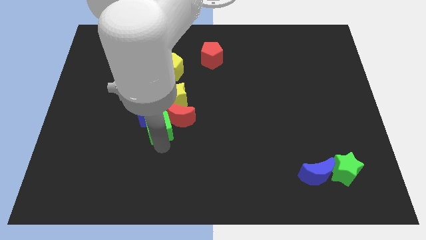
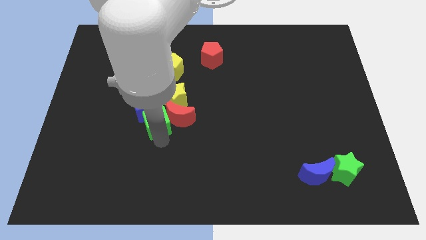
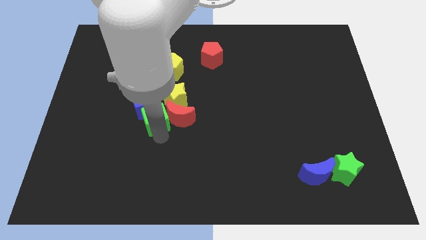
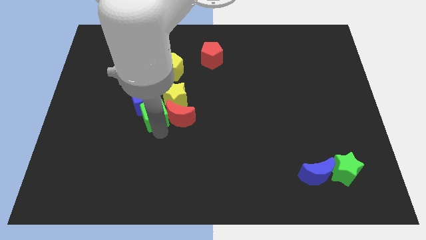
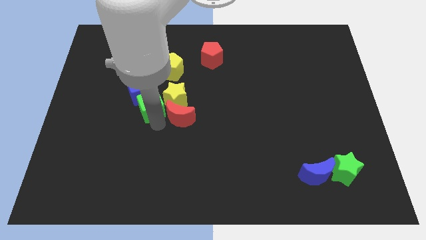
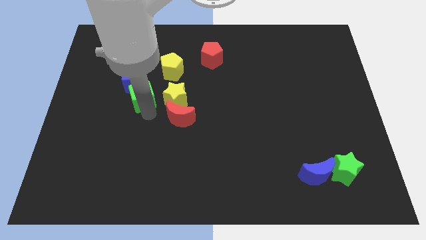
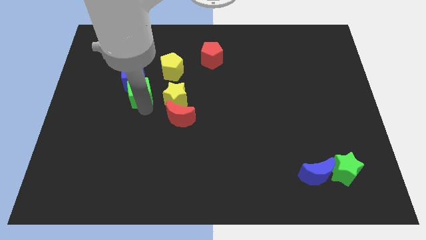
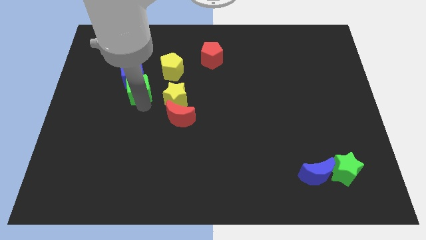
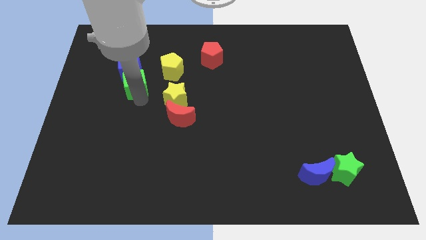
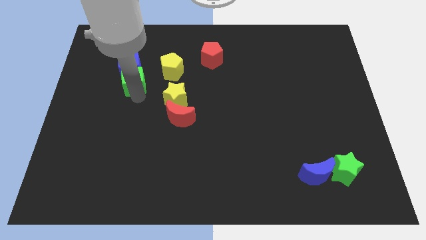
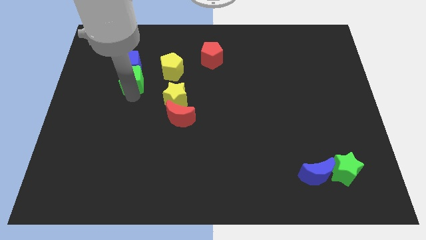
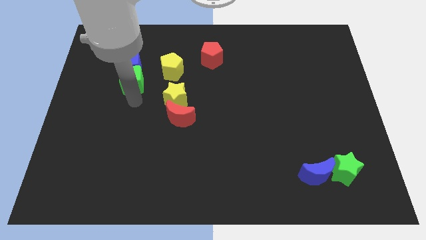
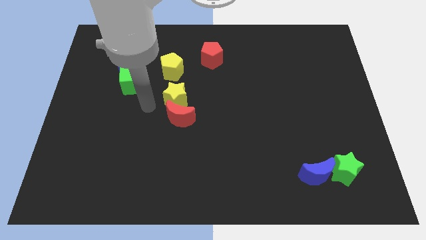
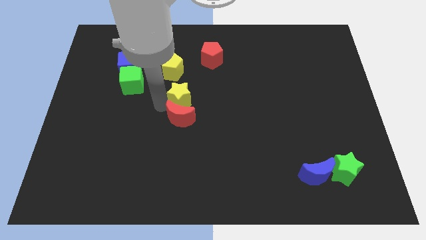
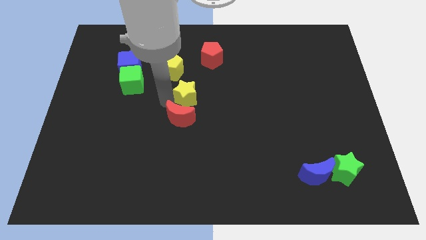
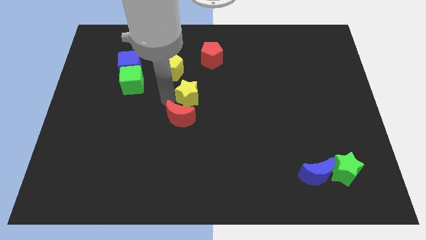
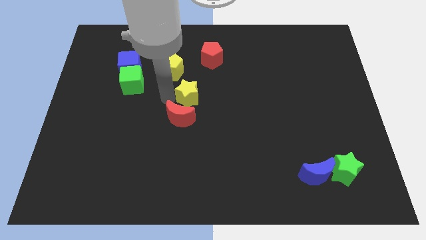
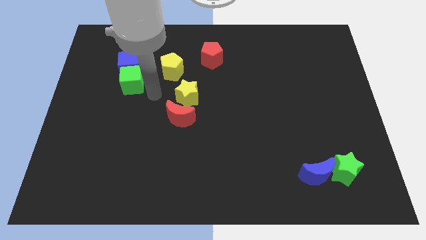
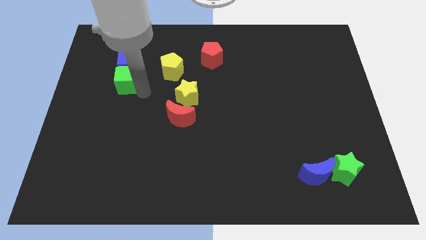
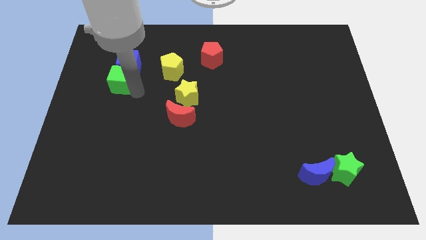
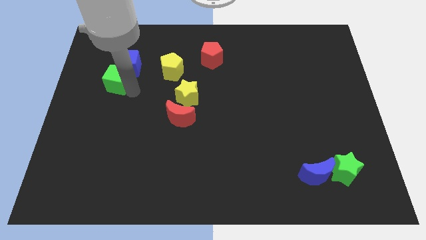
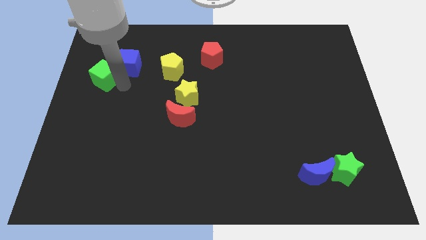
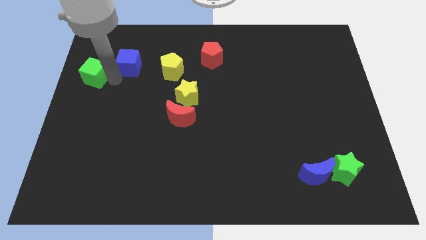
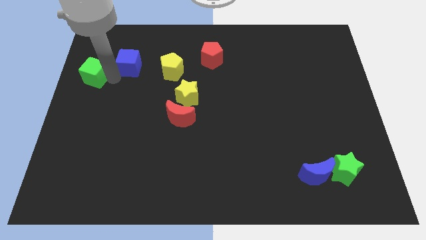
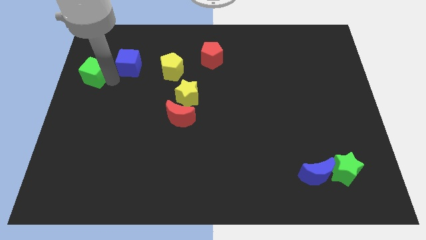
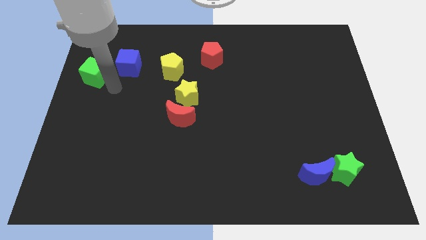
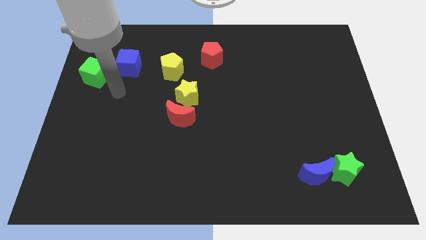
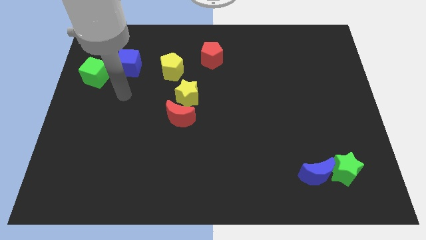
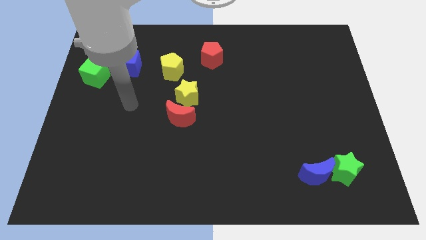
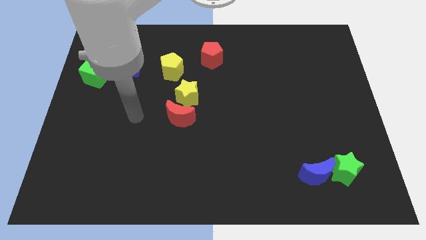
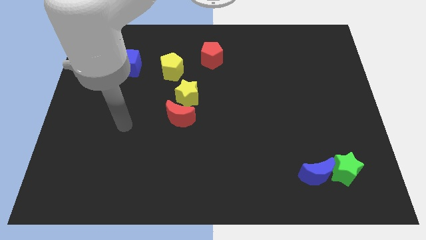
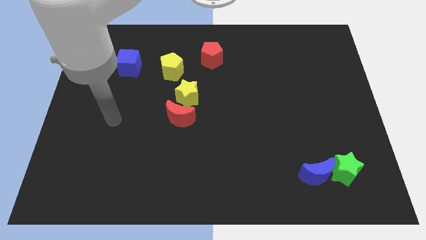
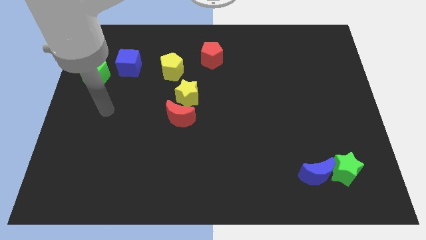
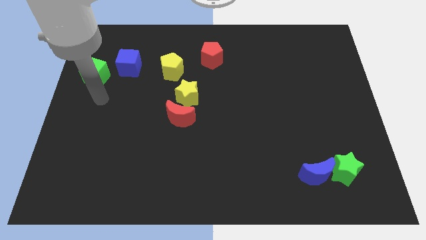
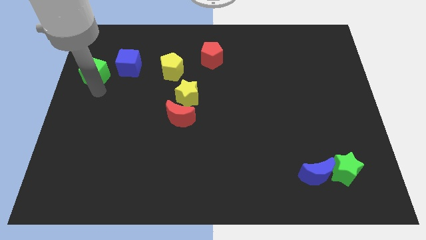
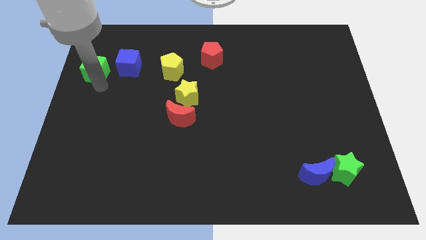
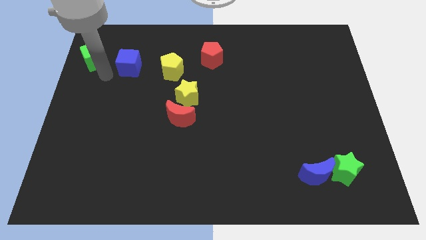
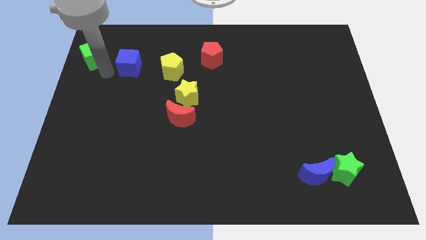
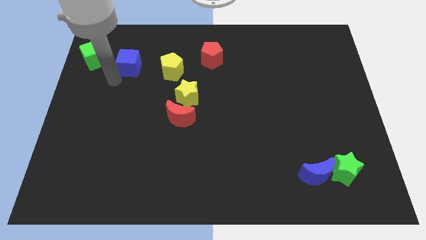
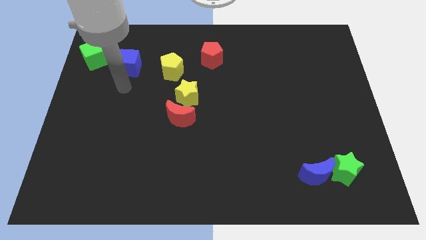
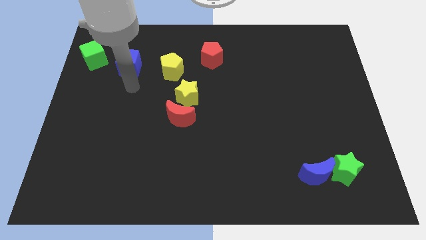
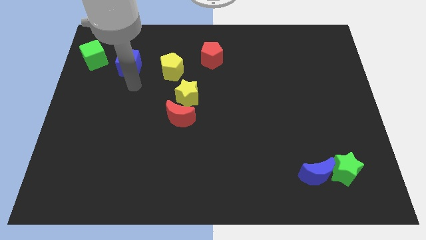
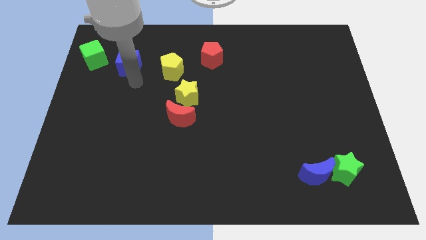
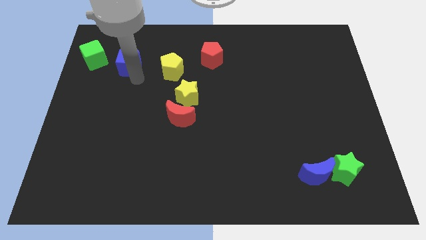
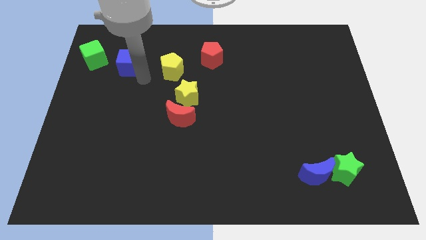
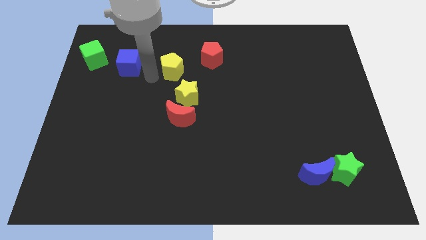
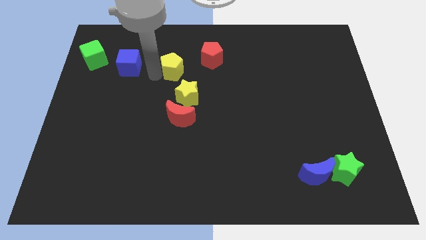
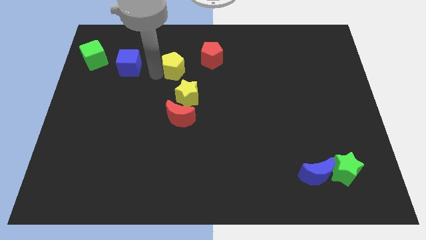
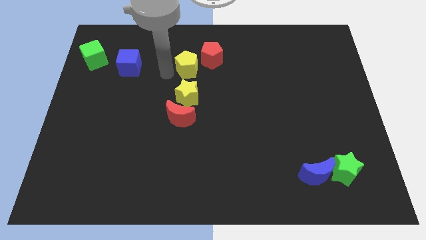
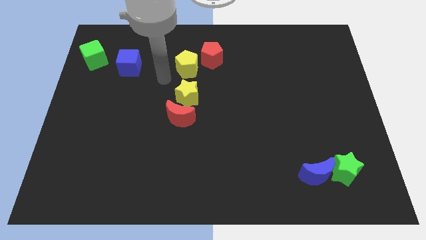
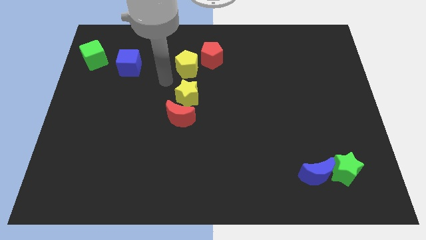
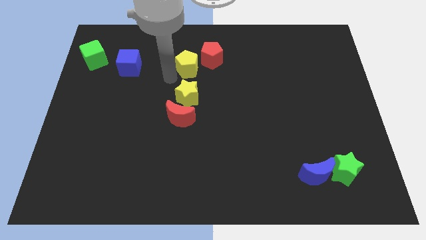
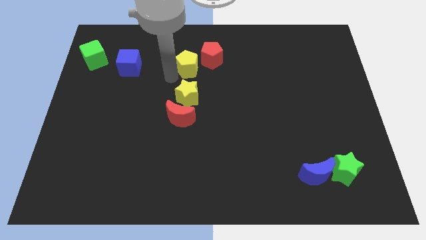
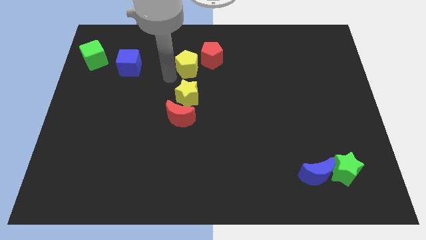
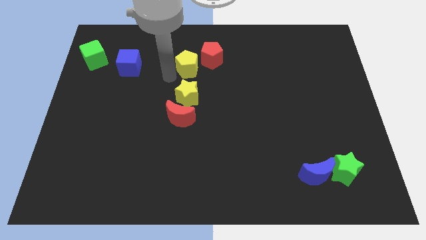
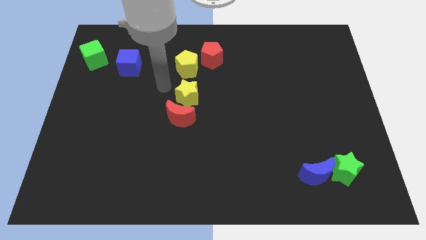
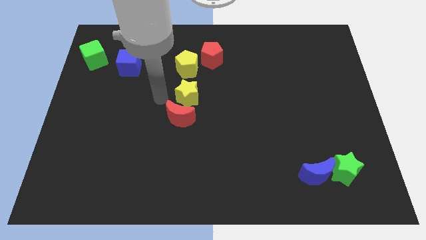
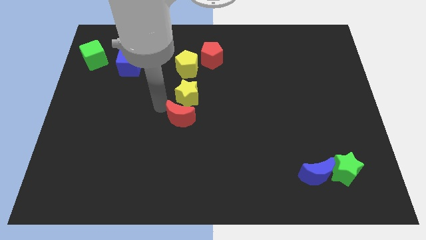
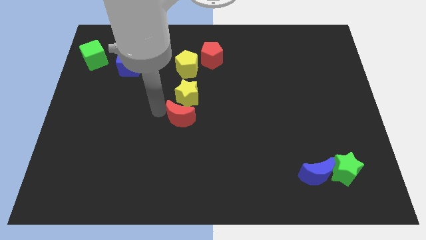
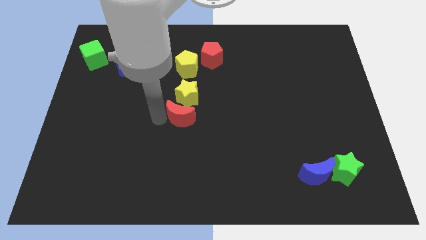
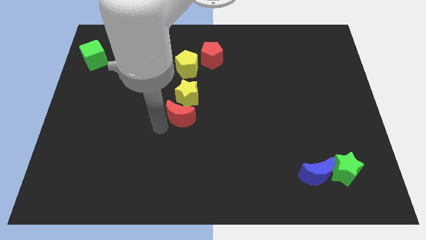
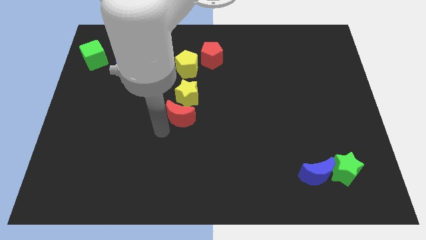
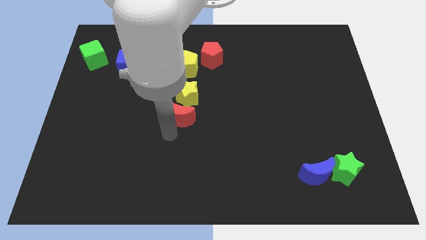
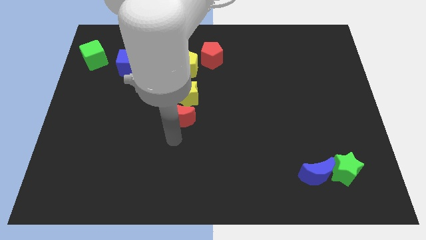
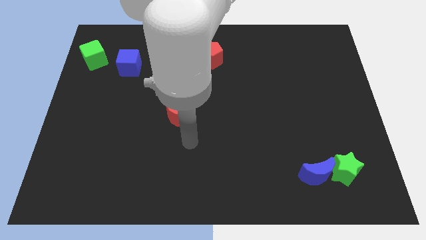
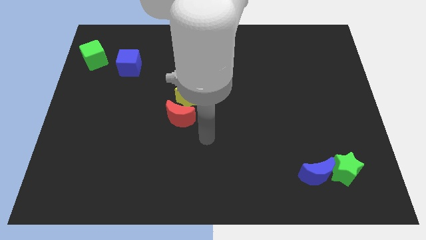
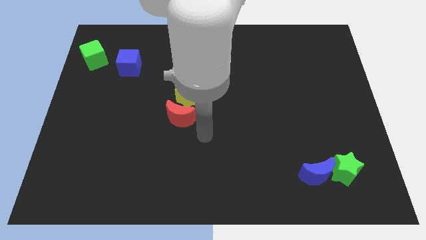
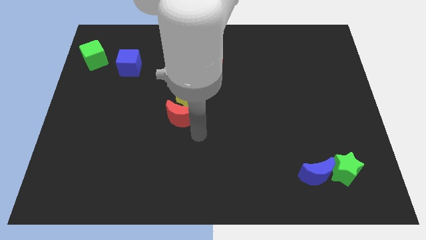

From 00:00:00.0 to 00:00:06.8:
push the cubes towards the top left corner of the board

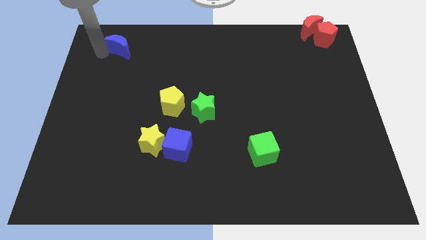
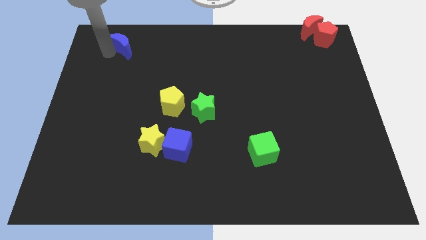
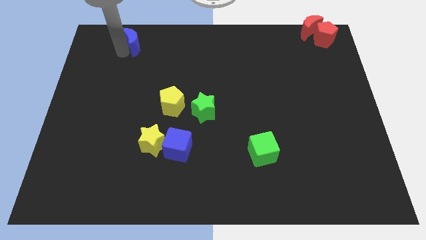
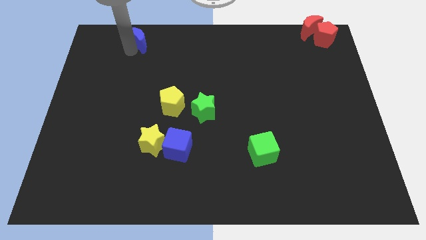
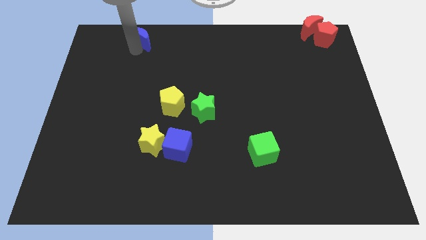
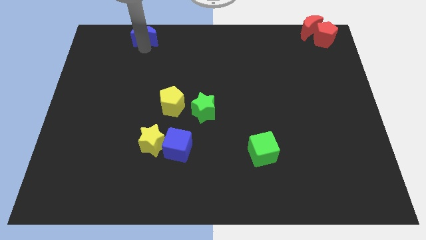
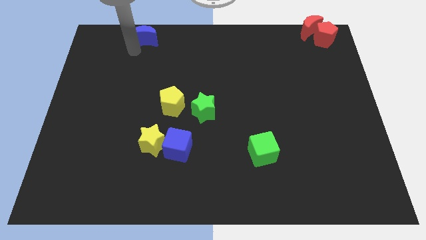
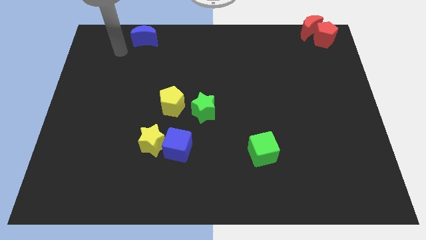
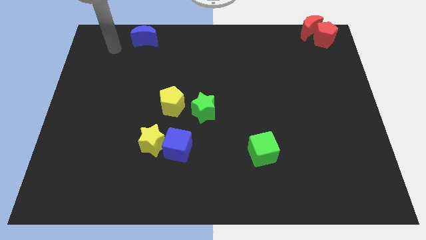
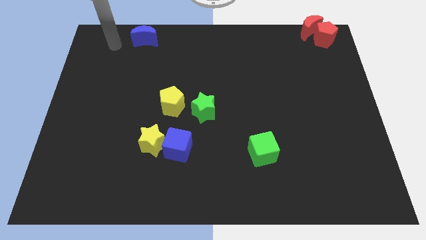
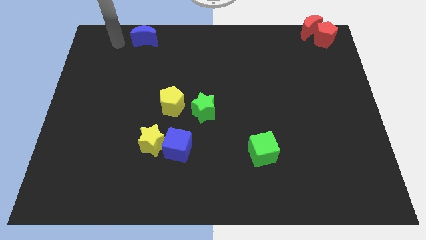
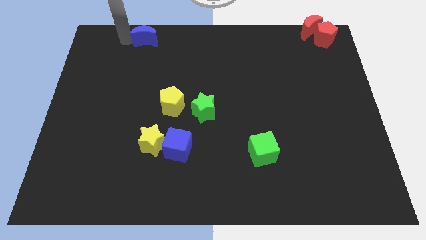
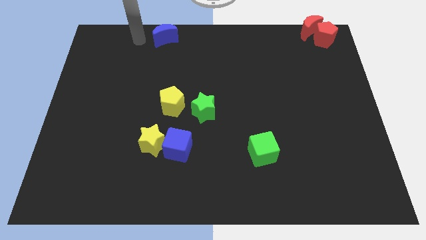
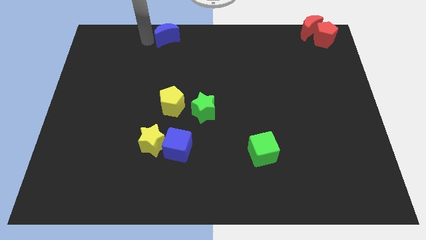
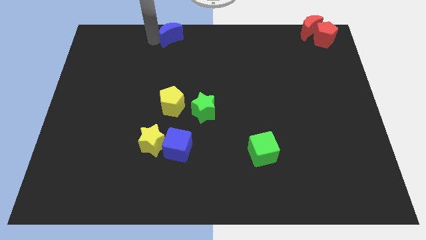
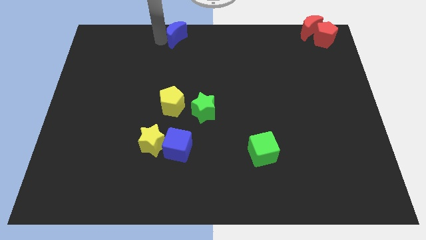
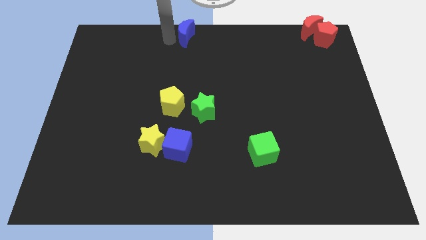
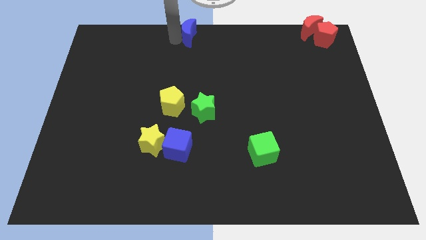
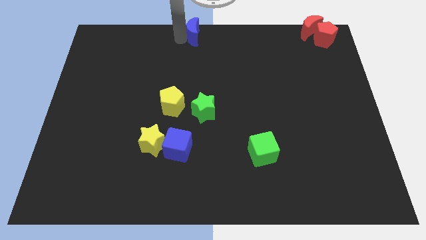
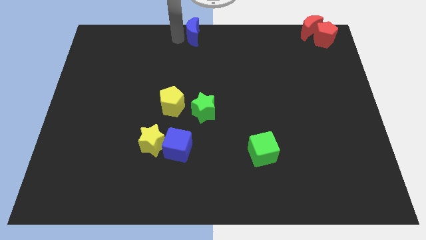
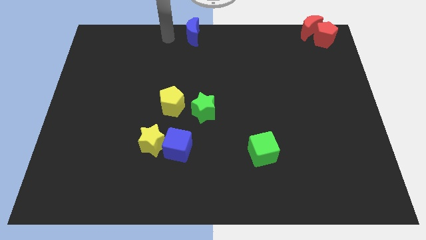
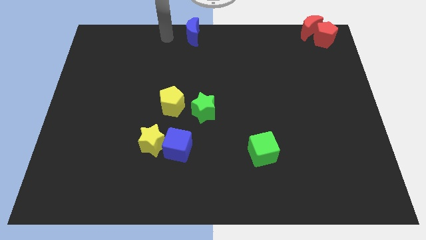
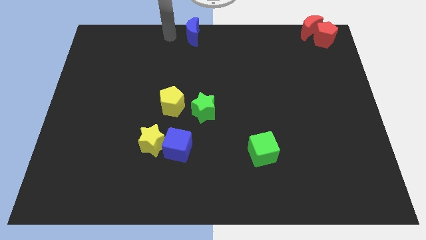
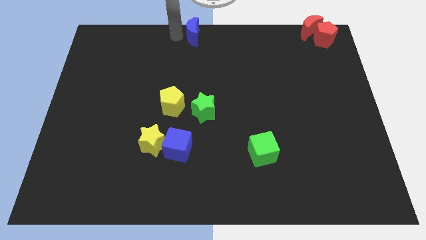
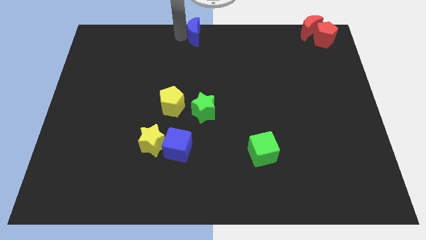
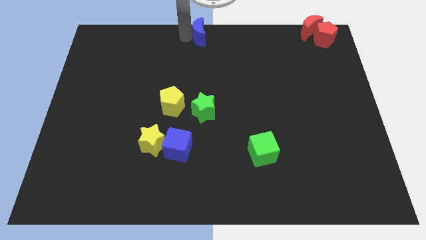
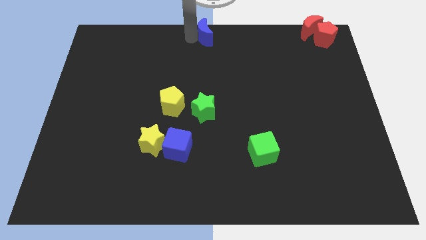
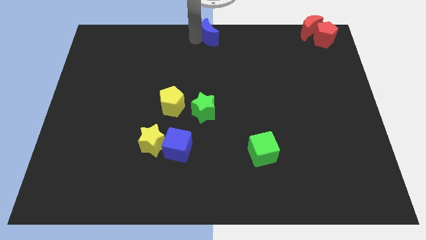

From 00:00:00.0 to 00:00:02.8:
put the blue crescent at the top center of the board
